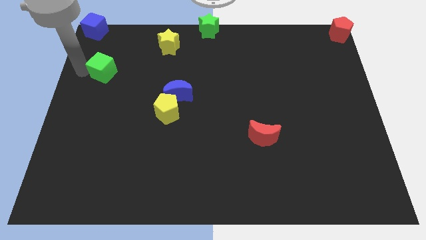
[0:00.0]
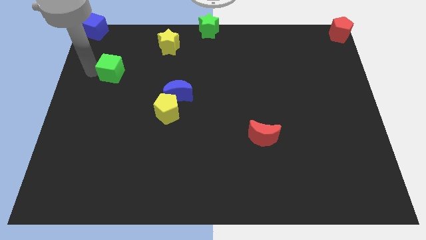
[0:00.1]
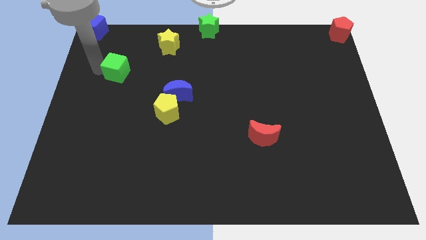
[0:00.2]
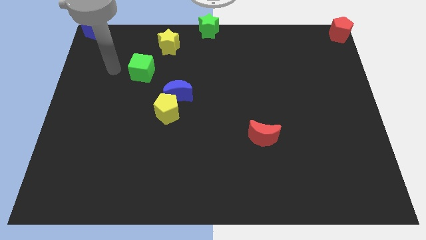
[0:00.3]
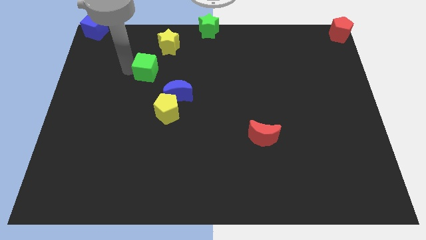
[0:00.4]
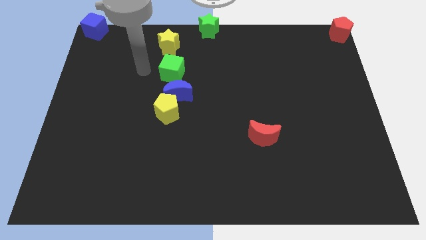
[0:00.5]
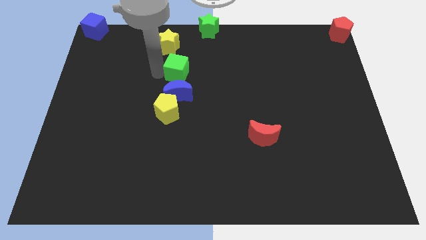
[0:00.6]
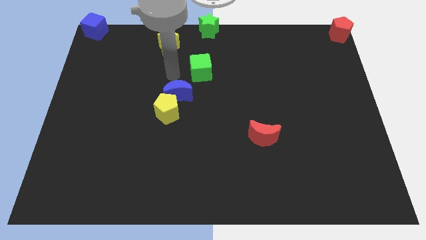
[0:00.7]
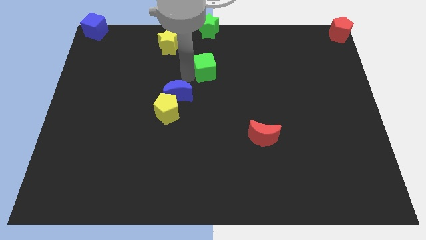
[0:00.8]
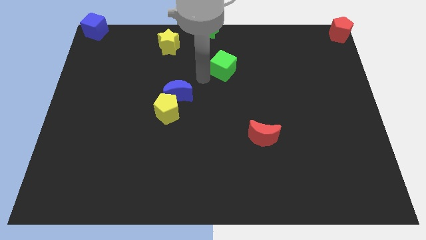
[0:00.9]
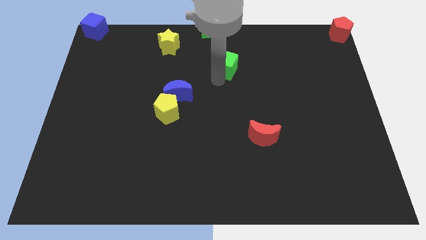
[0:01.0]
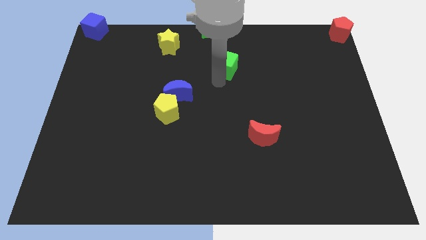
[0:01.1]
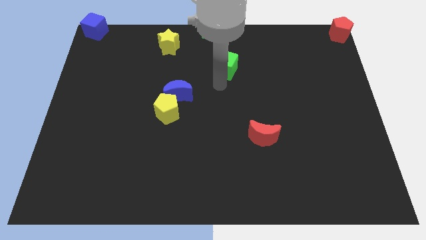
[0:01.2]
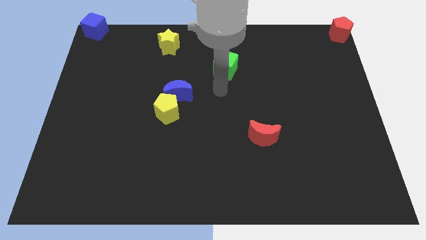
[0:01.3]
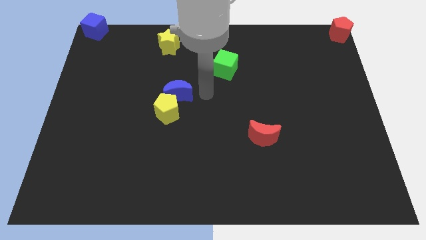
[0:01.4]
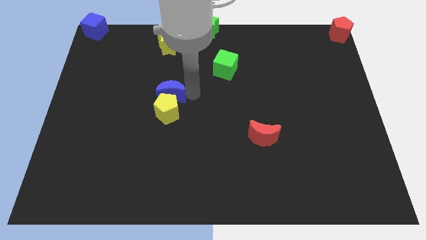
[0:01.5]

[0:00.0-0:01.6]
move the green cube towards the top center of the board

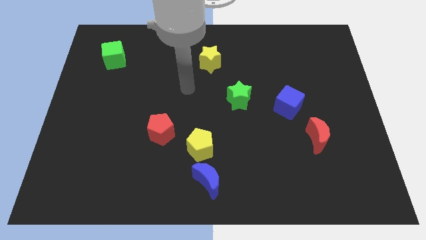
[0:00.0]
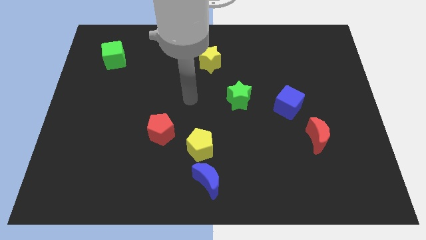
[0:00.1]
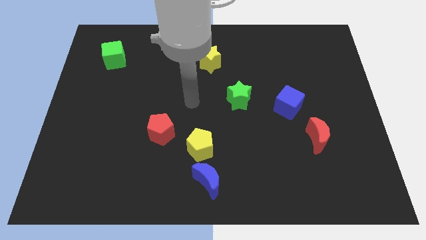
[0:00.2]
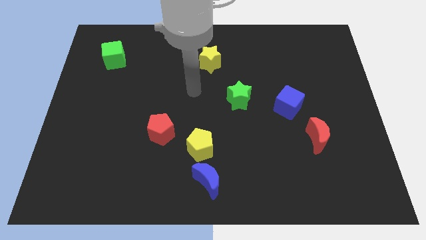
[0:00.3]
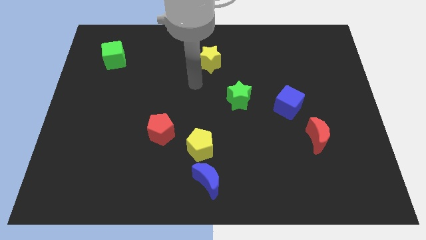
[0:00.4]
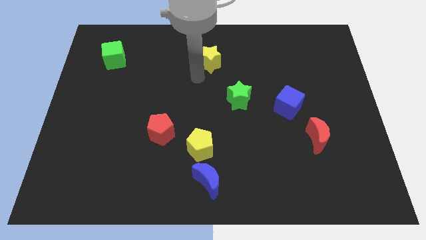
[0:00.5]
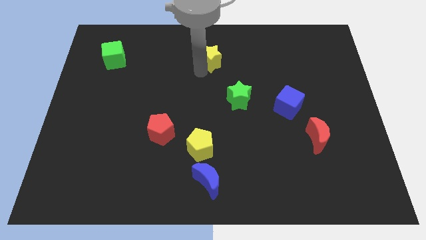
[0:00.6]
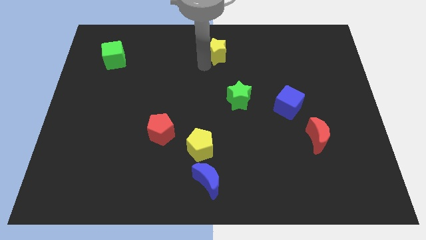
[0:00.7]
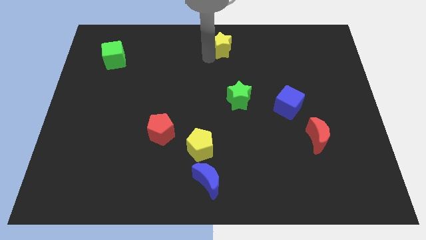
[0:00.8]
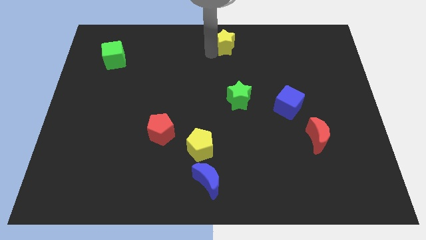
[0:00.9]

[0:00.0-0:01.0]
move the yellow star towards top

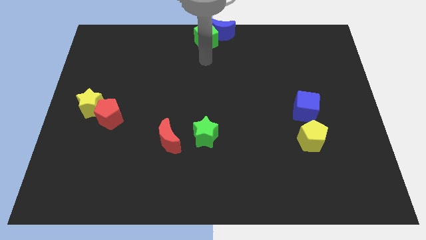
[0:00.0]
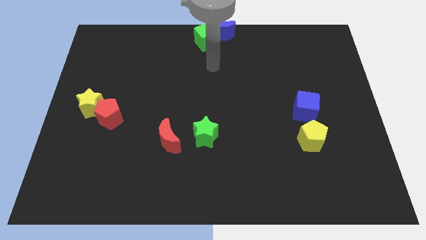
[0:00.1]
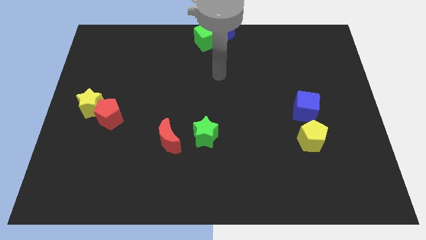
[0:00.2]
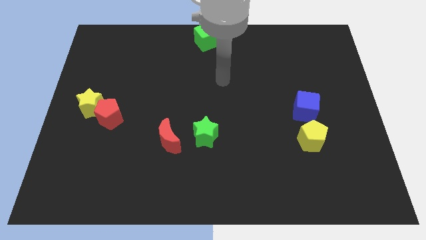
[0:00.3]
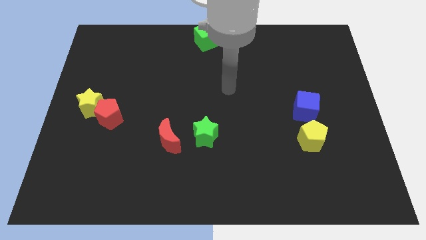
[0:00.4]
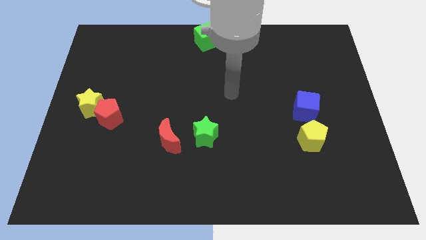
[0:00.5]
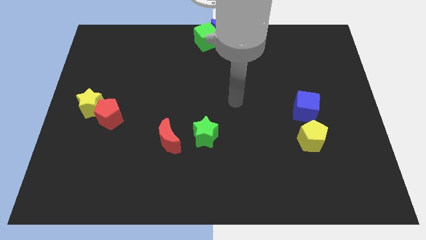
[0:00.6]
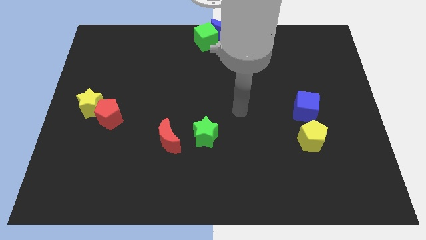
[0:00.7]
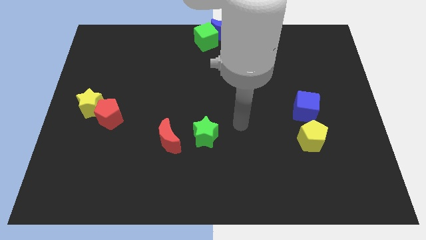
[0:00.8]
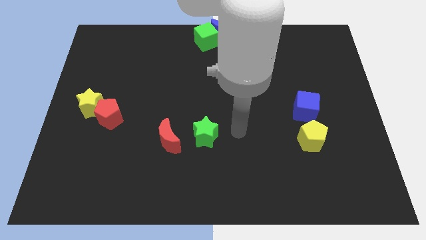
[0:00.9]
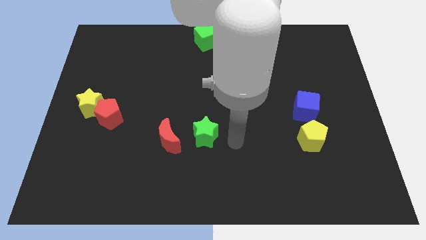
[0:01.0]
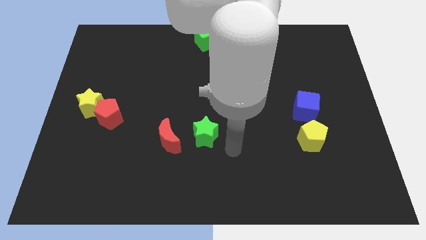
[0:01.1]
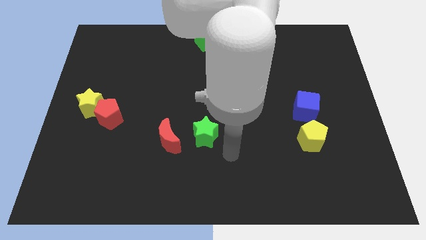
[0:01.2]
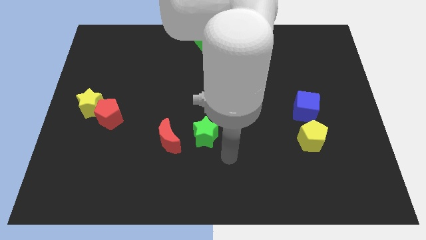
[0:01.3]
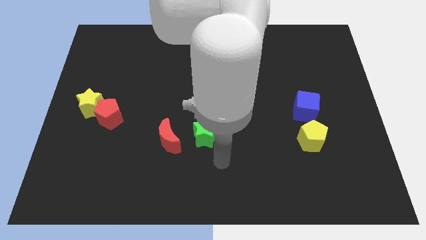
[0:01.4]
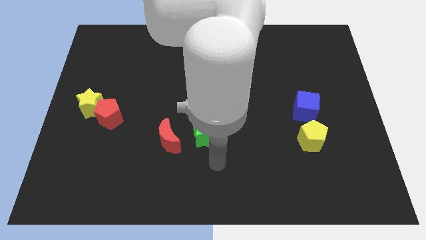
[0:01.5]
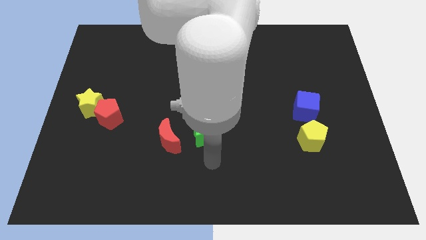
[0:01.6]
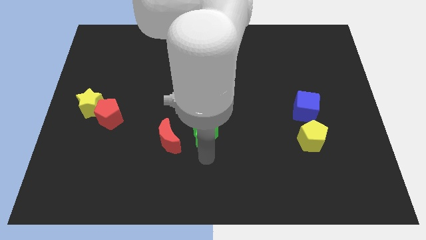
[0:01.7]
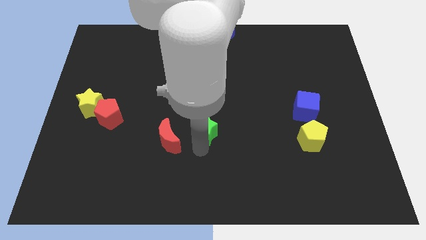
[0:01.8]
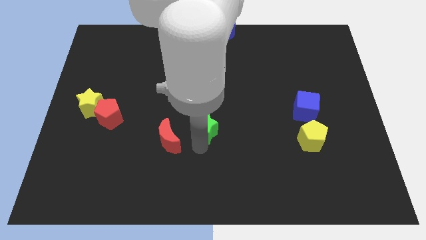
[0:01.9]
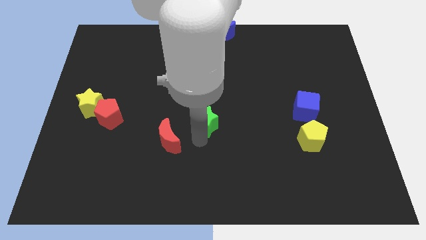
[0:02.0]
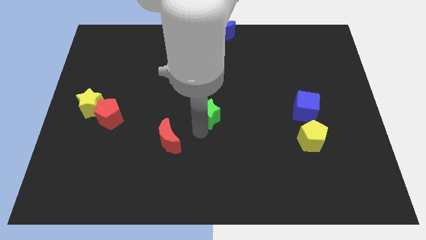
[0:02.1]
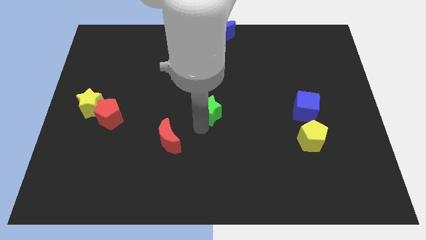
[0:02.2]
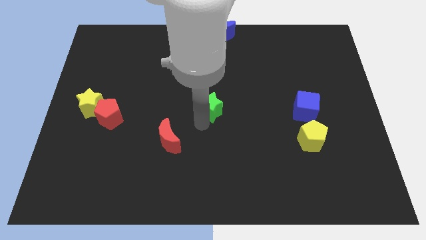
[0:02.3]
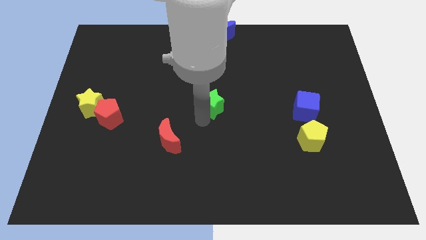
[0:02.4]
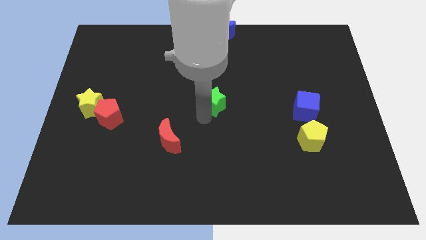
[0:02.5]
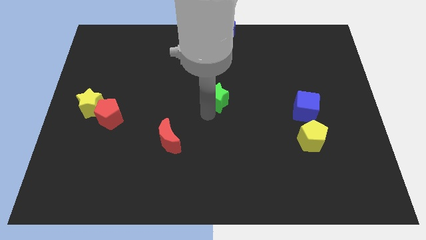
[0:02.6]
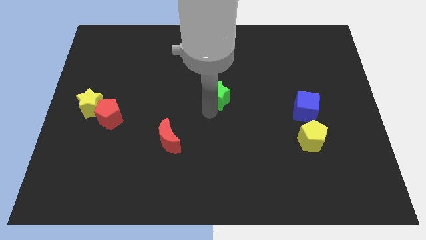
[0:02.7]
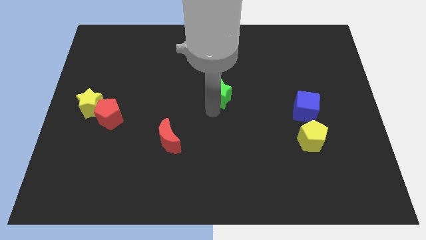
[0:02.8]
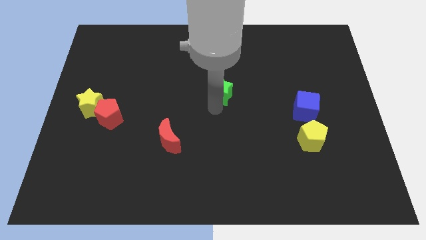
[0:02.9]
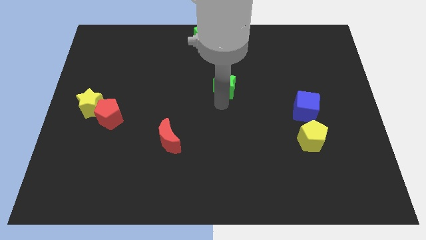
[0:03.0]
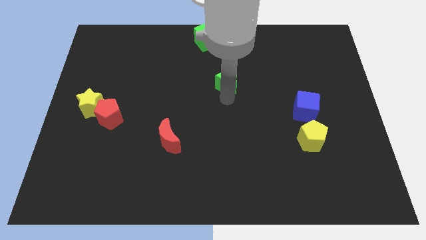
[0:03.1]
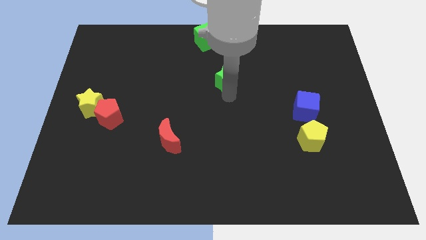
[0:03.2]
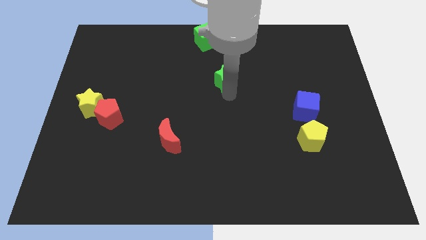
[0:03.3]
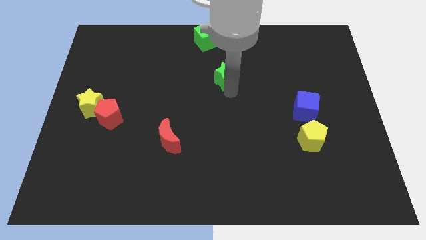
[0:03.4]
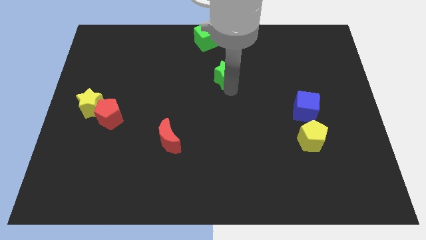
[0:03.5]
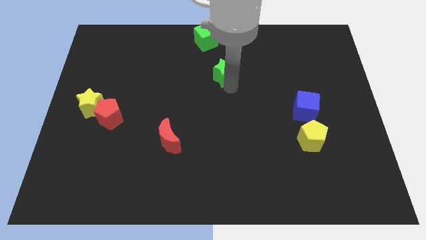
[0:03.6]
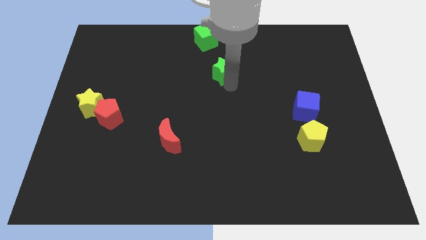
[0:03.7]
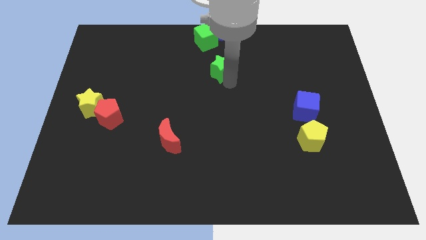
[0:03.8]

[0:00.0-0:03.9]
move the green star to the top left of the blue cube

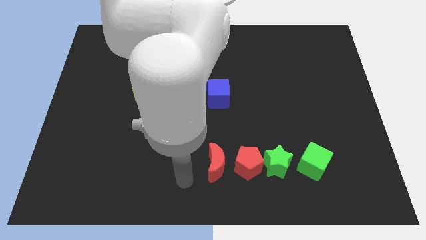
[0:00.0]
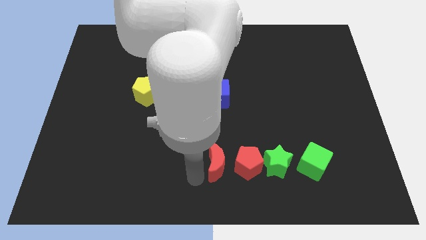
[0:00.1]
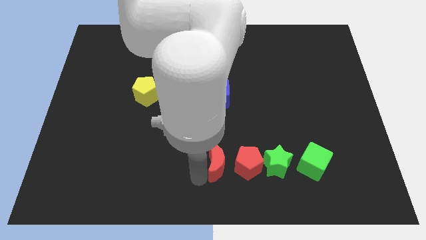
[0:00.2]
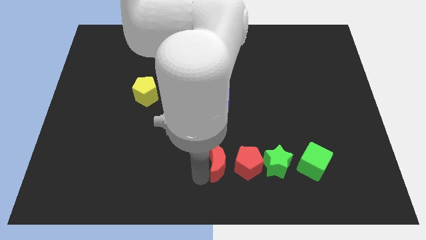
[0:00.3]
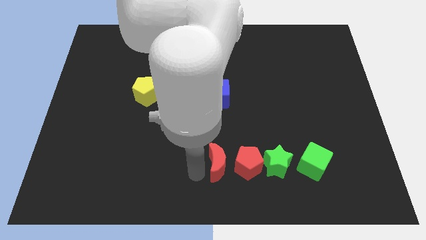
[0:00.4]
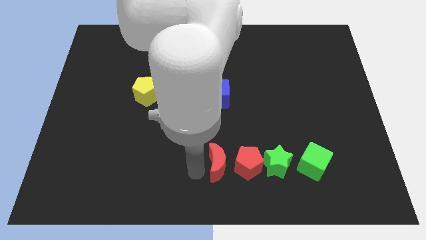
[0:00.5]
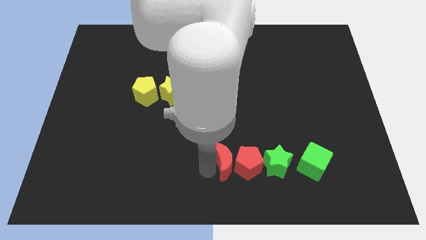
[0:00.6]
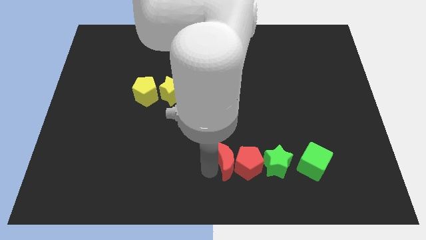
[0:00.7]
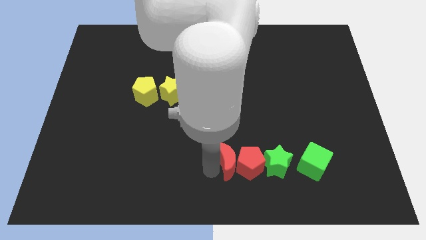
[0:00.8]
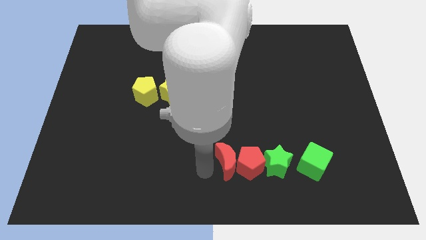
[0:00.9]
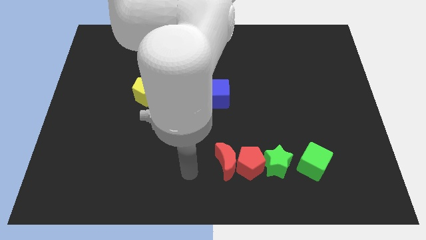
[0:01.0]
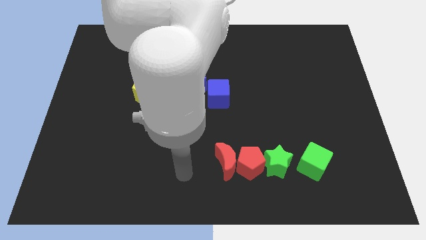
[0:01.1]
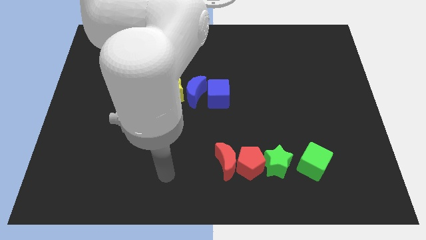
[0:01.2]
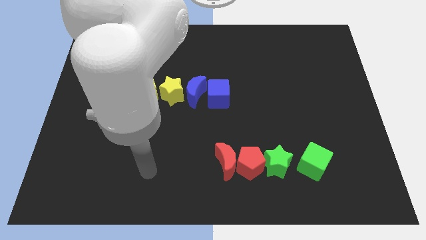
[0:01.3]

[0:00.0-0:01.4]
put the red crescent to the left of the red pentagon

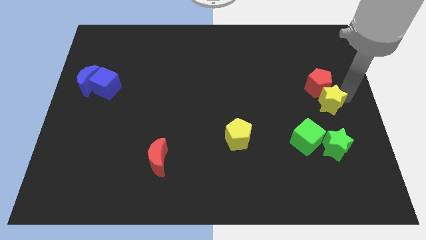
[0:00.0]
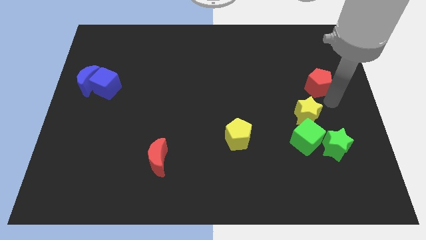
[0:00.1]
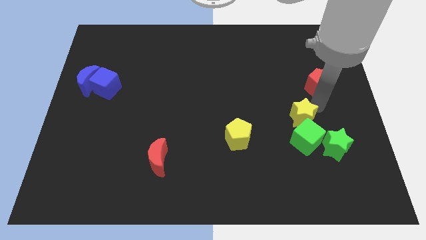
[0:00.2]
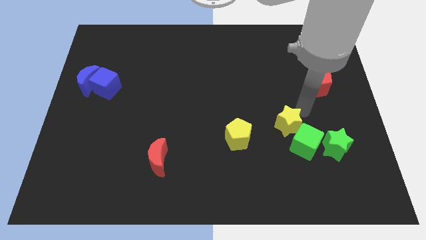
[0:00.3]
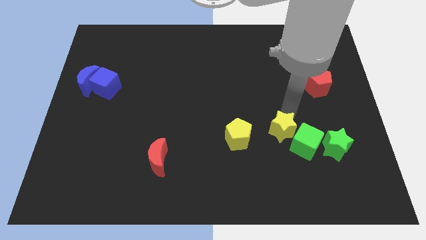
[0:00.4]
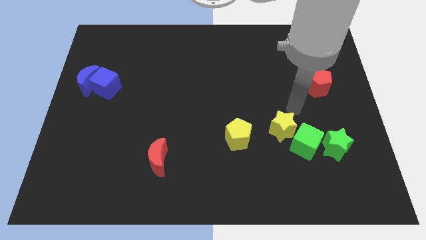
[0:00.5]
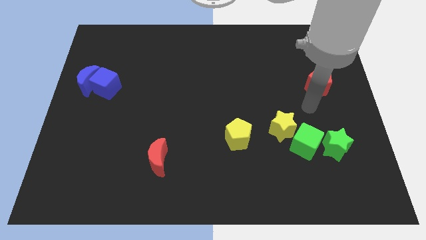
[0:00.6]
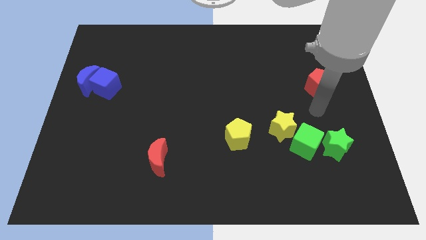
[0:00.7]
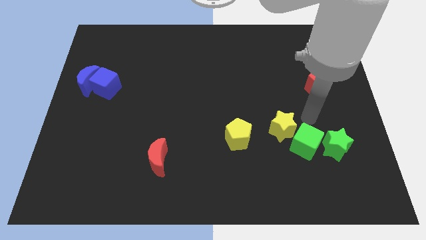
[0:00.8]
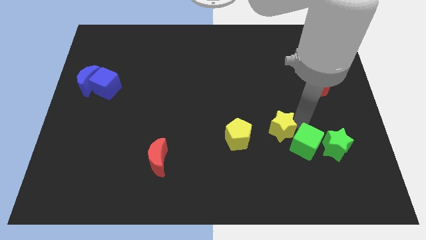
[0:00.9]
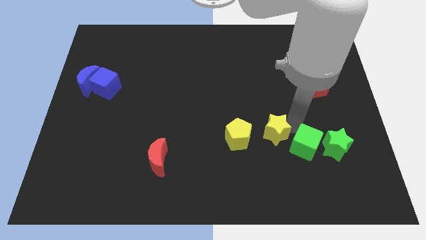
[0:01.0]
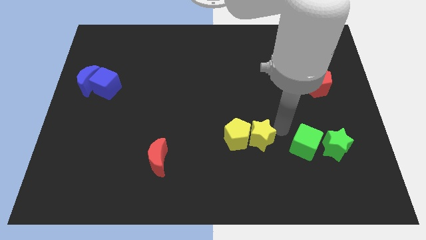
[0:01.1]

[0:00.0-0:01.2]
place the yellow star in between the yellow pentagon and green cube
